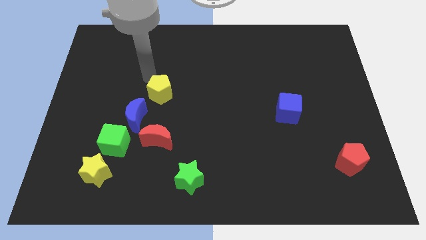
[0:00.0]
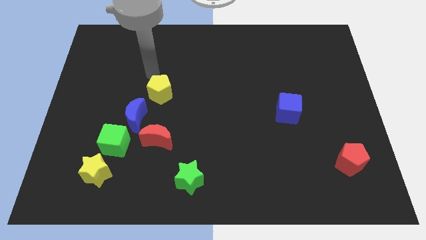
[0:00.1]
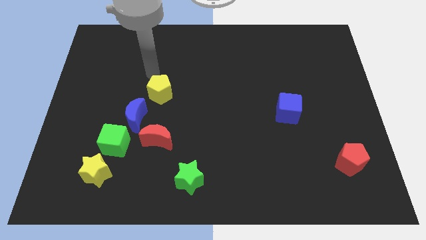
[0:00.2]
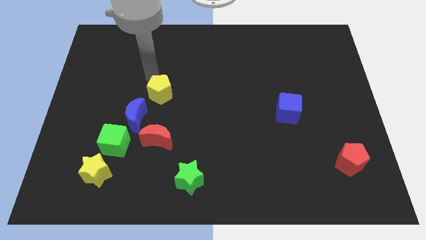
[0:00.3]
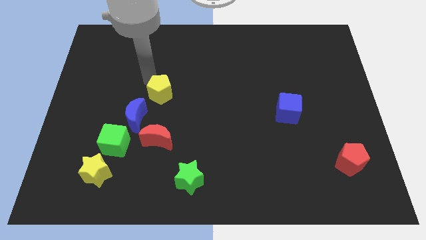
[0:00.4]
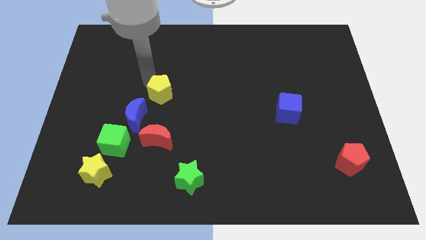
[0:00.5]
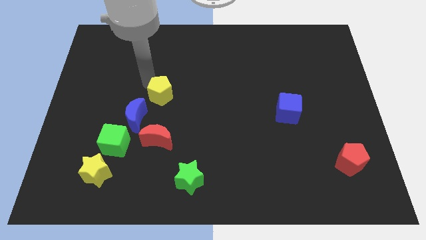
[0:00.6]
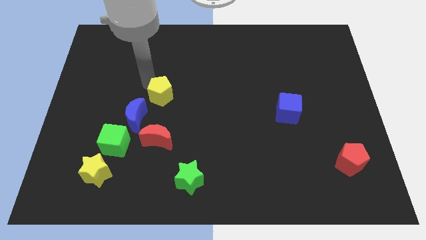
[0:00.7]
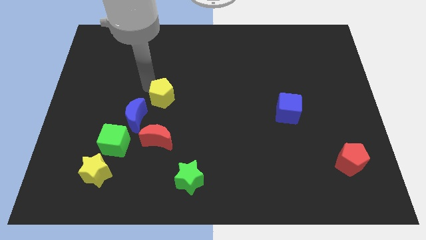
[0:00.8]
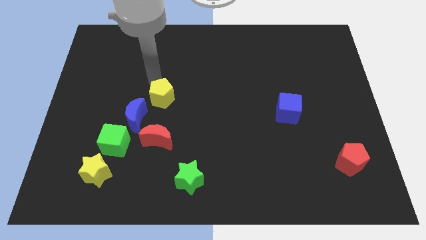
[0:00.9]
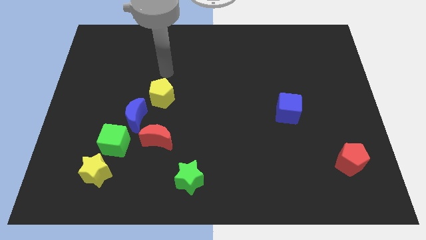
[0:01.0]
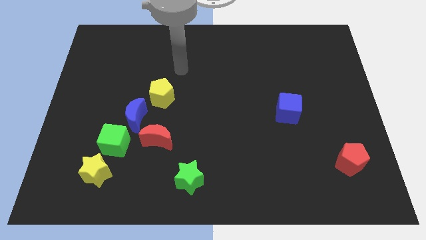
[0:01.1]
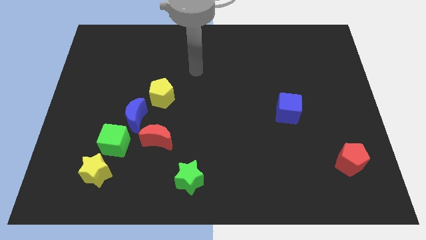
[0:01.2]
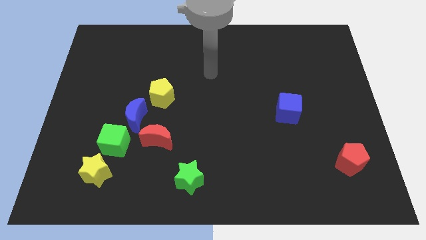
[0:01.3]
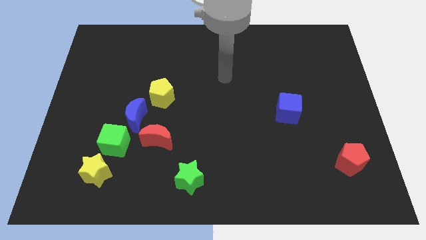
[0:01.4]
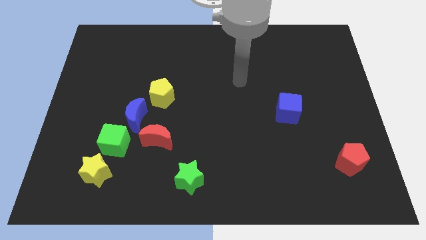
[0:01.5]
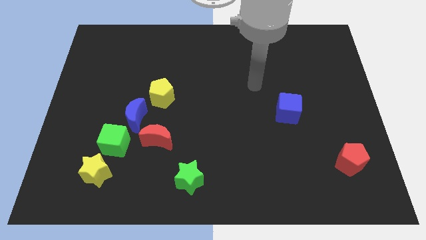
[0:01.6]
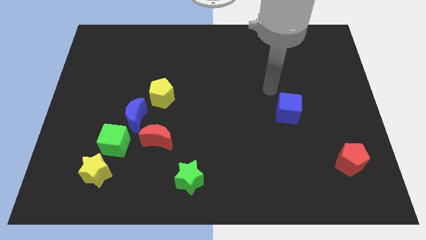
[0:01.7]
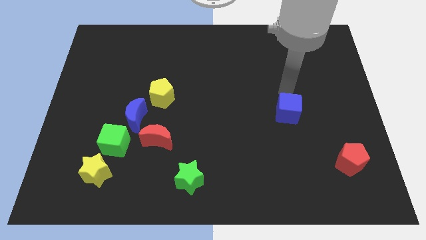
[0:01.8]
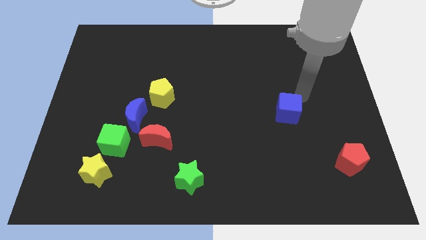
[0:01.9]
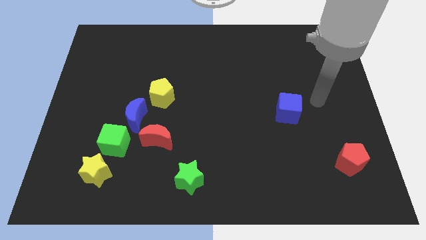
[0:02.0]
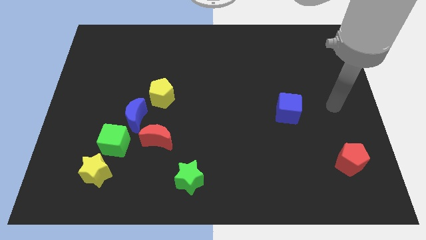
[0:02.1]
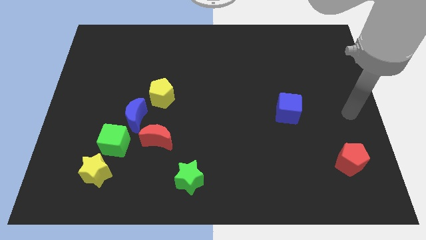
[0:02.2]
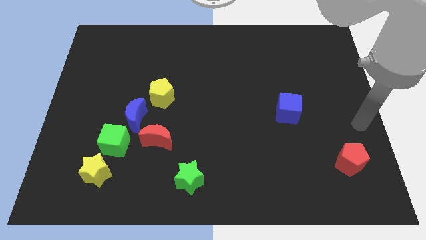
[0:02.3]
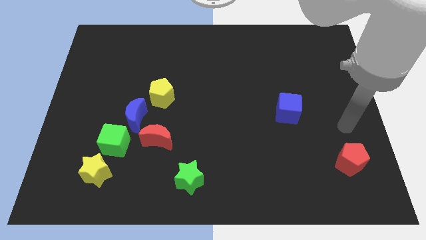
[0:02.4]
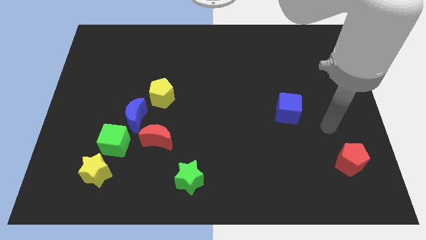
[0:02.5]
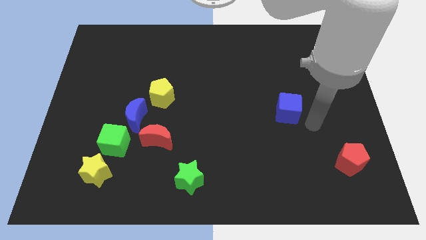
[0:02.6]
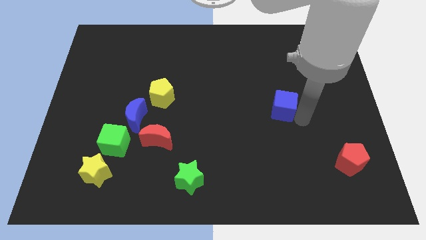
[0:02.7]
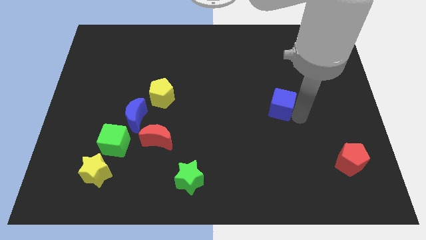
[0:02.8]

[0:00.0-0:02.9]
move the blue cube slightly towards the center

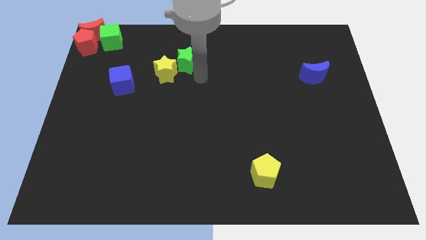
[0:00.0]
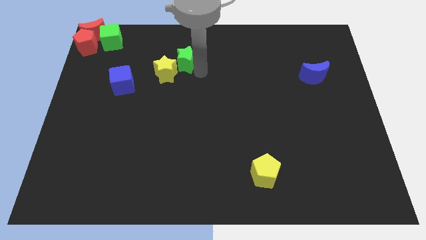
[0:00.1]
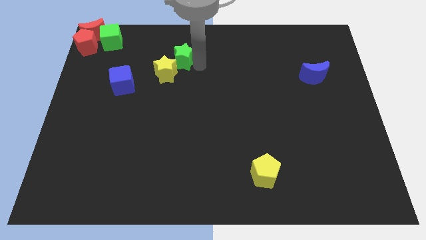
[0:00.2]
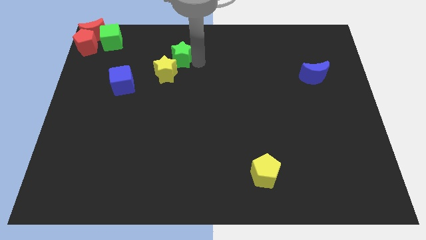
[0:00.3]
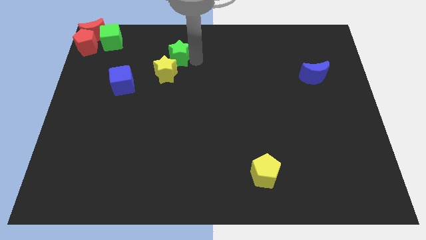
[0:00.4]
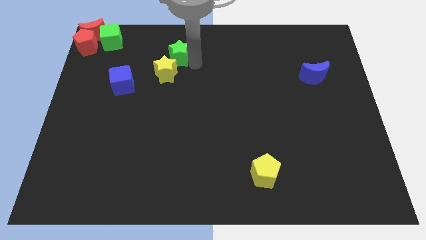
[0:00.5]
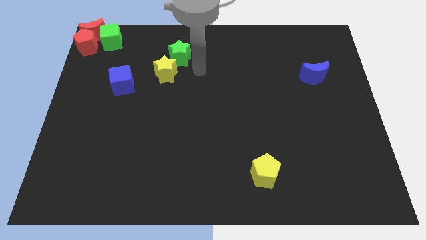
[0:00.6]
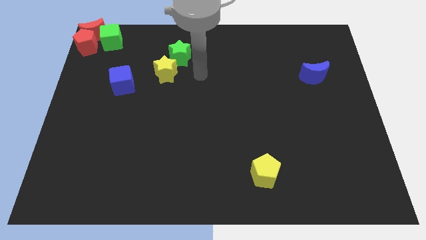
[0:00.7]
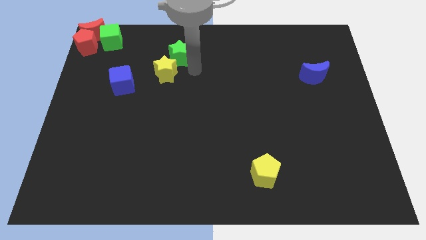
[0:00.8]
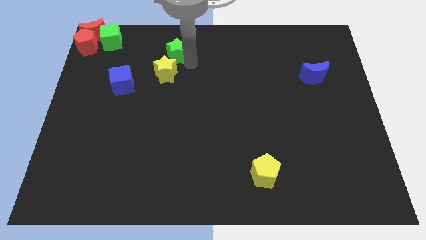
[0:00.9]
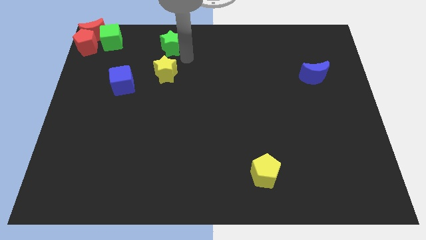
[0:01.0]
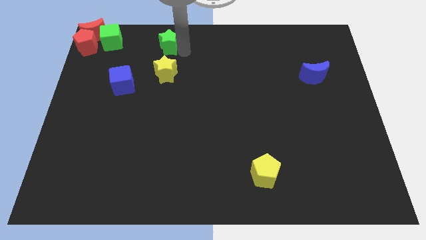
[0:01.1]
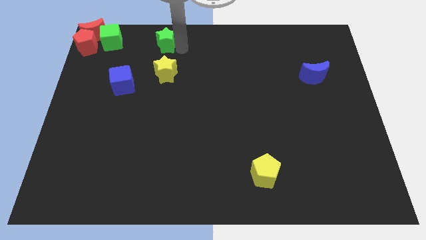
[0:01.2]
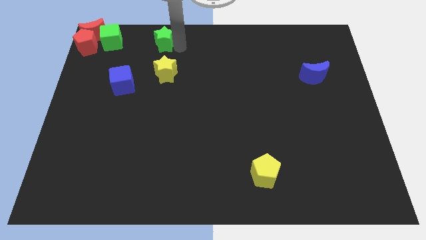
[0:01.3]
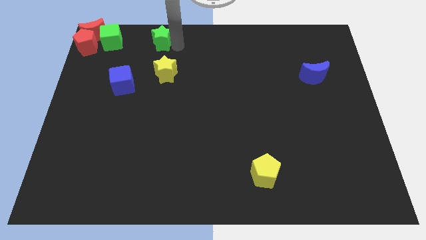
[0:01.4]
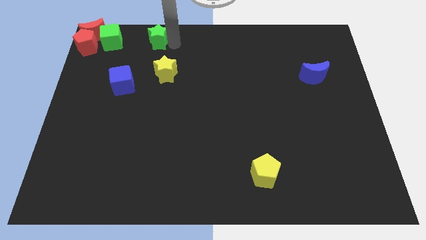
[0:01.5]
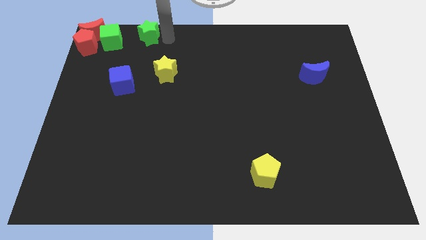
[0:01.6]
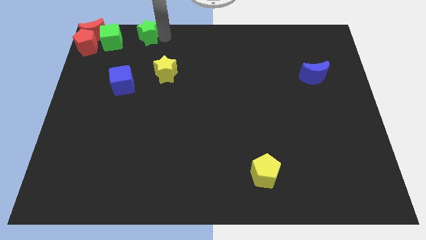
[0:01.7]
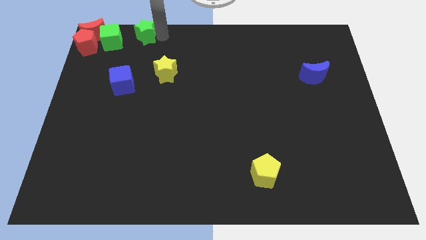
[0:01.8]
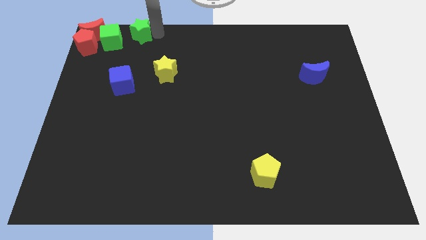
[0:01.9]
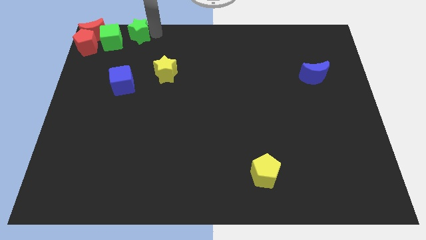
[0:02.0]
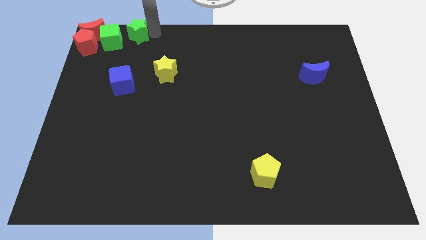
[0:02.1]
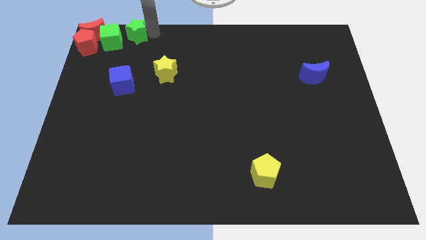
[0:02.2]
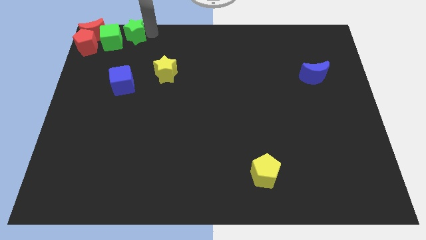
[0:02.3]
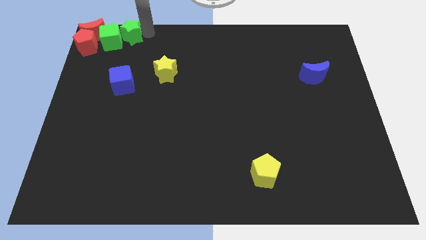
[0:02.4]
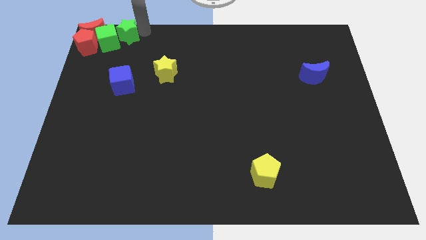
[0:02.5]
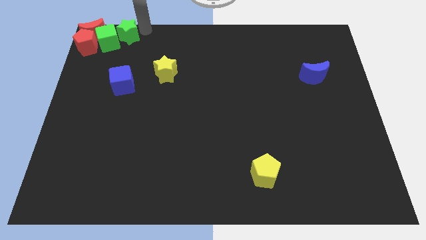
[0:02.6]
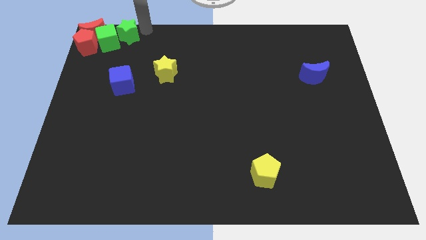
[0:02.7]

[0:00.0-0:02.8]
push the green star into the green cube

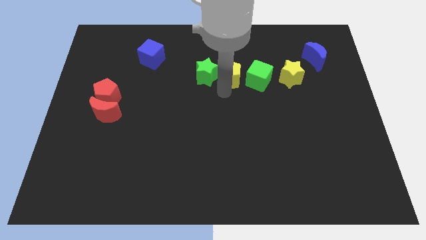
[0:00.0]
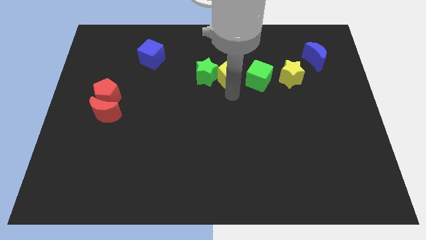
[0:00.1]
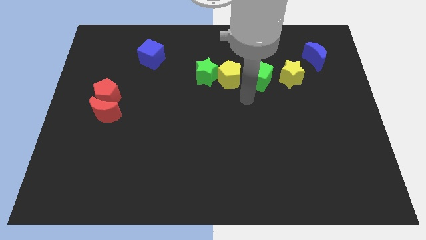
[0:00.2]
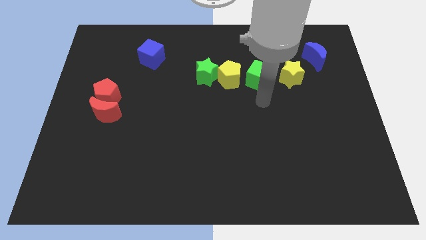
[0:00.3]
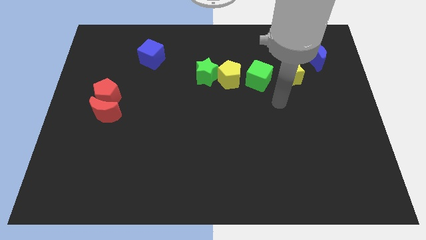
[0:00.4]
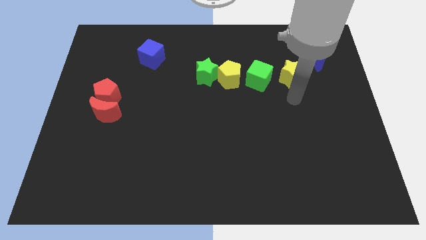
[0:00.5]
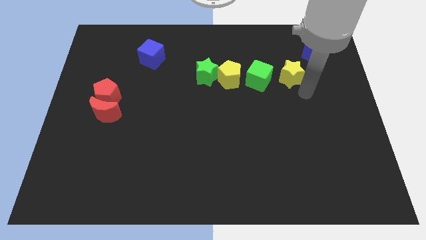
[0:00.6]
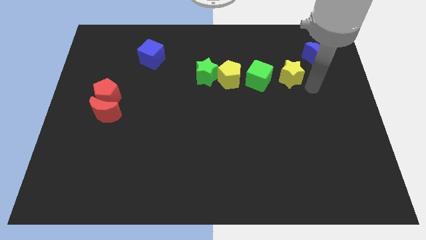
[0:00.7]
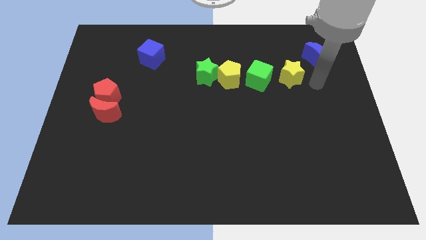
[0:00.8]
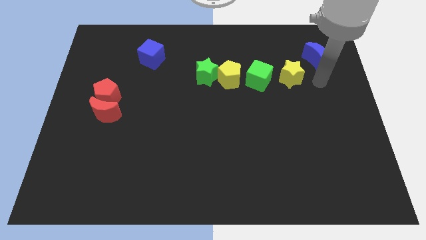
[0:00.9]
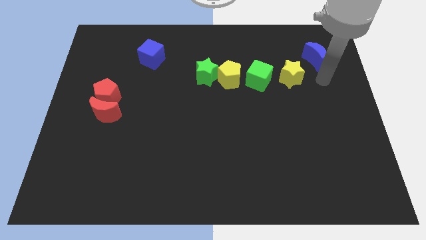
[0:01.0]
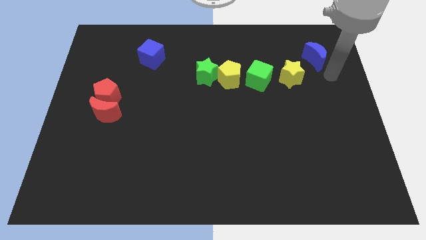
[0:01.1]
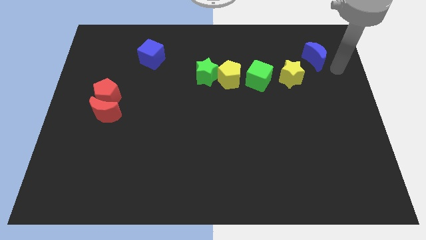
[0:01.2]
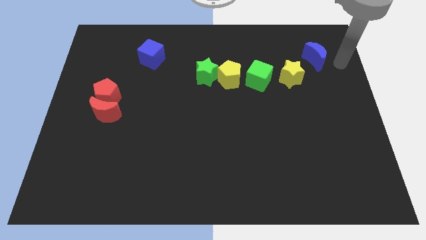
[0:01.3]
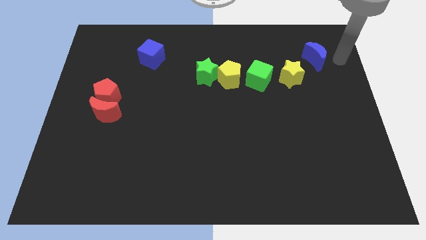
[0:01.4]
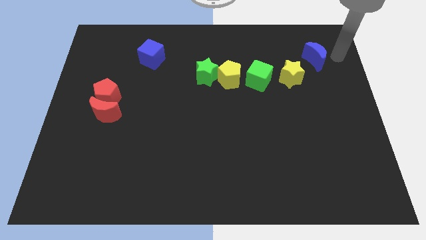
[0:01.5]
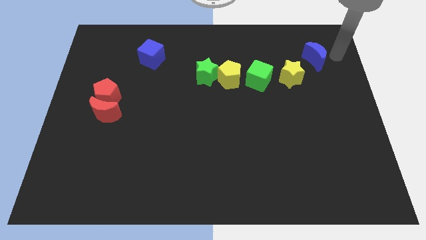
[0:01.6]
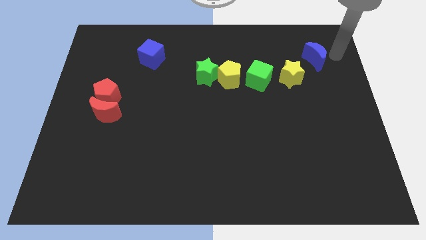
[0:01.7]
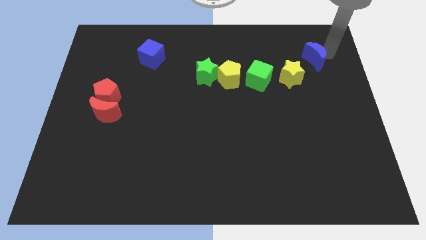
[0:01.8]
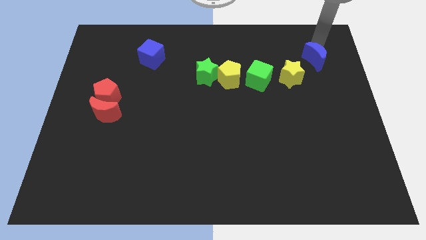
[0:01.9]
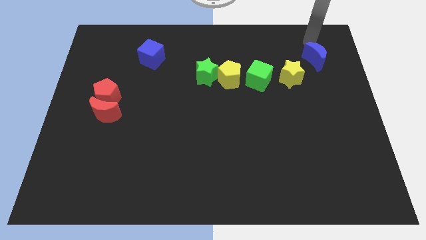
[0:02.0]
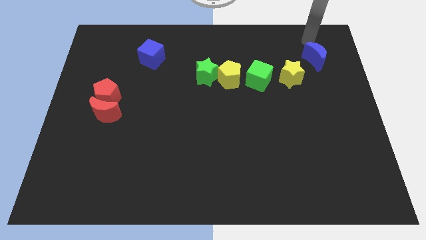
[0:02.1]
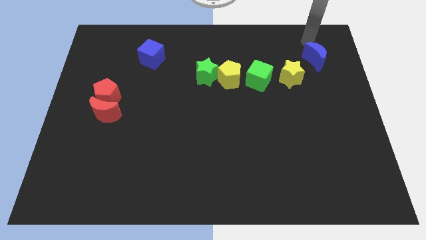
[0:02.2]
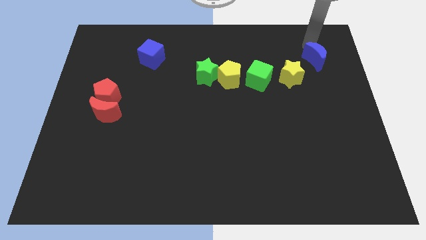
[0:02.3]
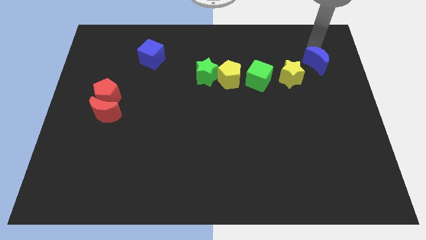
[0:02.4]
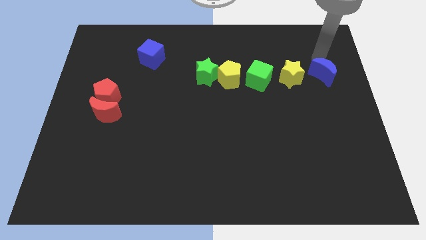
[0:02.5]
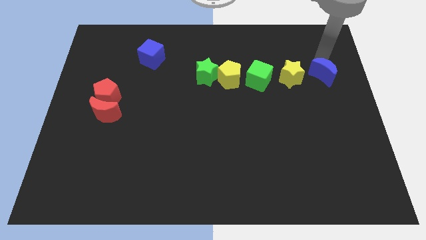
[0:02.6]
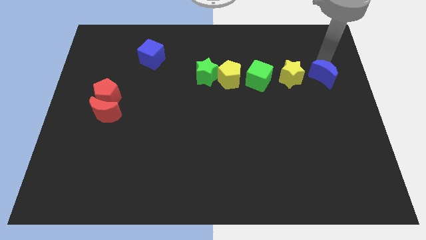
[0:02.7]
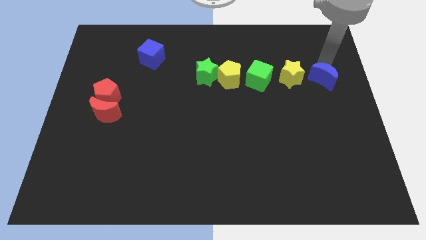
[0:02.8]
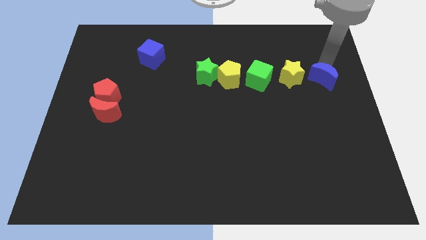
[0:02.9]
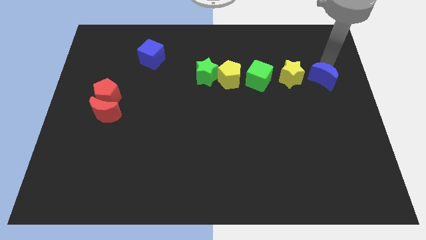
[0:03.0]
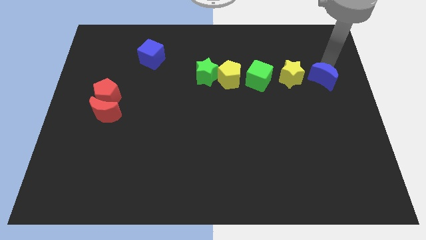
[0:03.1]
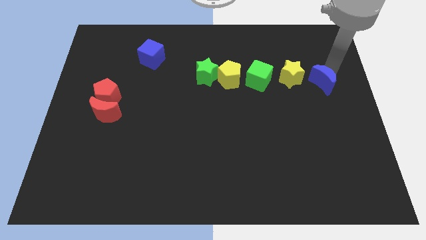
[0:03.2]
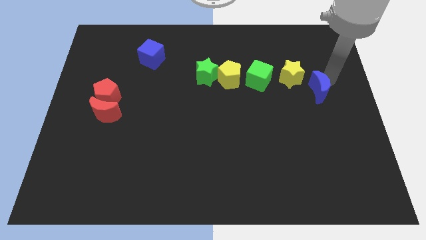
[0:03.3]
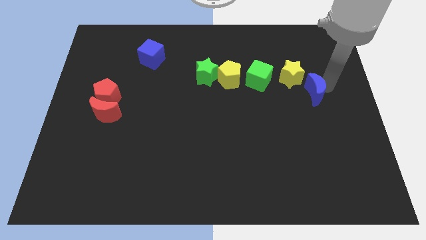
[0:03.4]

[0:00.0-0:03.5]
place the blue moon at the bottom right side of yellow star
